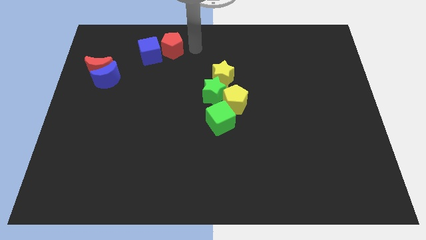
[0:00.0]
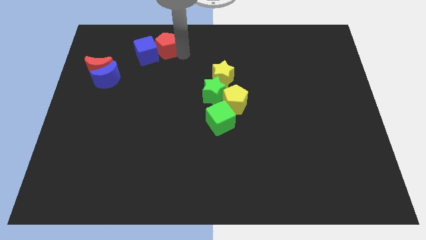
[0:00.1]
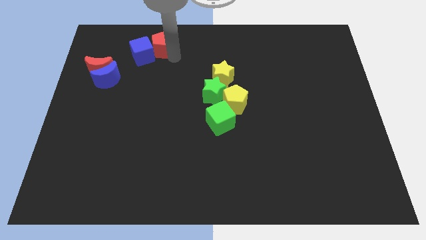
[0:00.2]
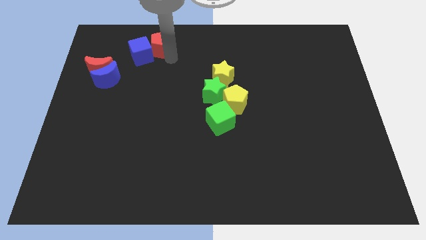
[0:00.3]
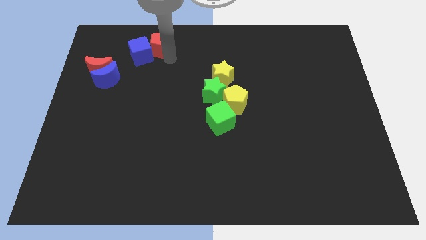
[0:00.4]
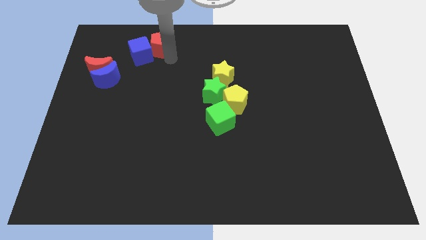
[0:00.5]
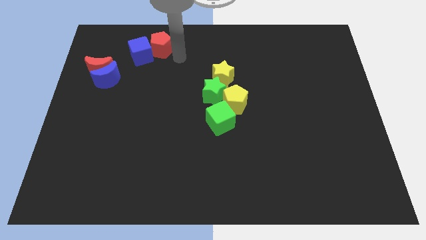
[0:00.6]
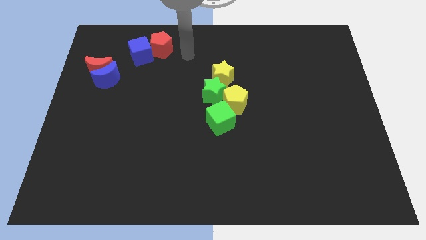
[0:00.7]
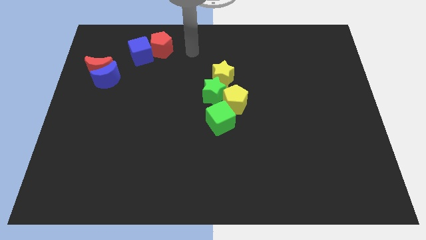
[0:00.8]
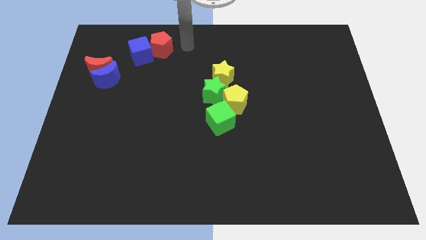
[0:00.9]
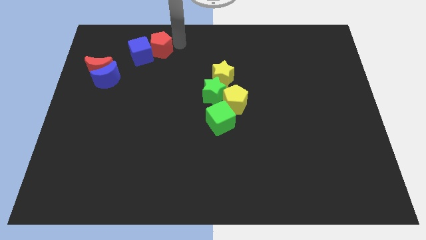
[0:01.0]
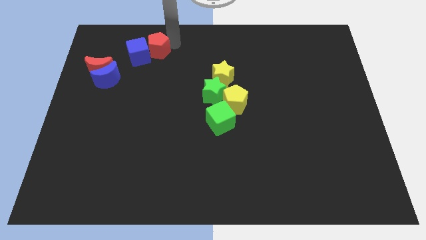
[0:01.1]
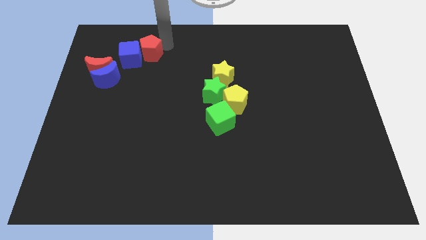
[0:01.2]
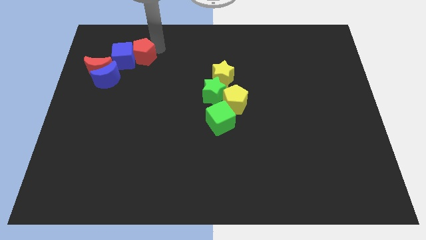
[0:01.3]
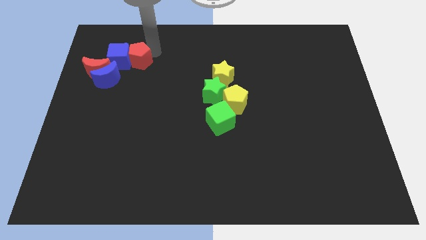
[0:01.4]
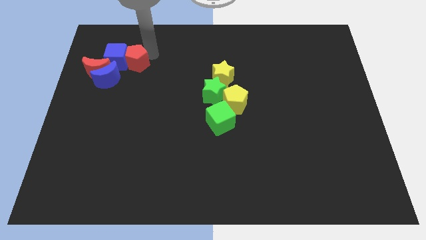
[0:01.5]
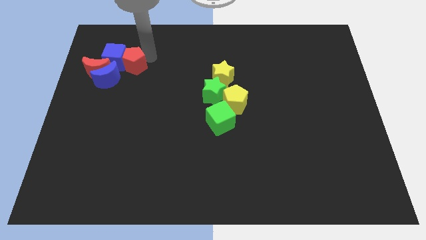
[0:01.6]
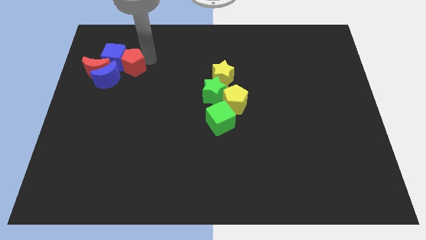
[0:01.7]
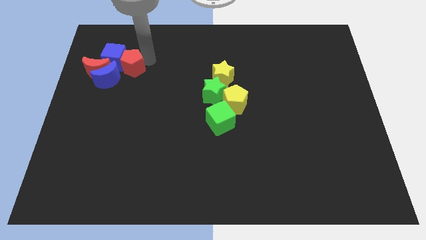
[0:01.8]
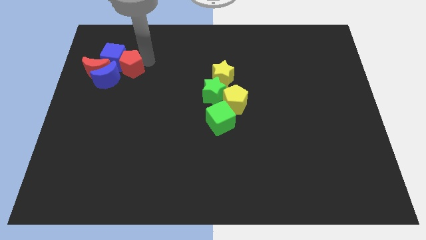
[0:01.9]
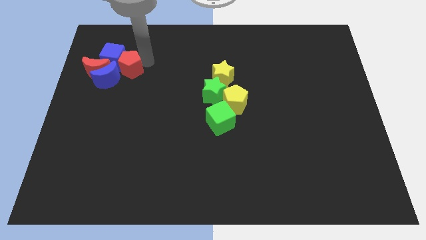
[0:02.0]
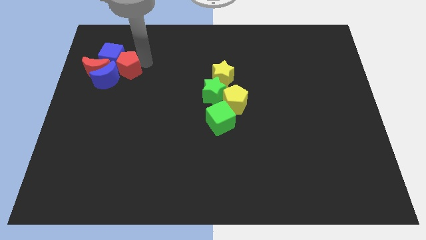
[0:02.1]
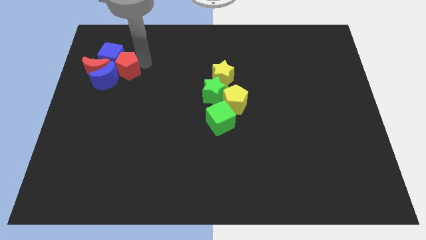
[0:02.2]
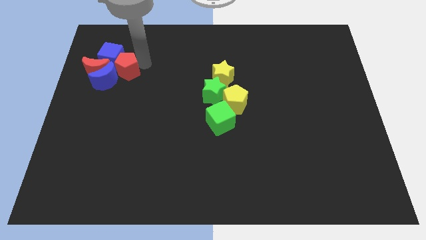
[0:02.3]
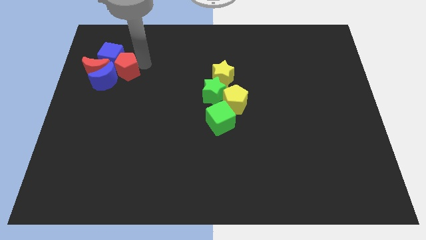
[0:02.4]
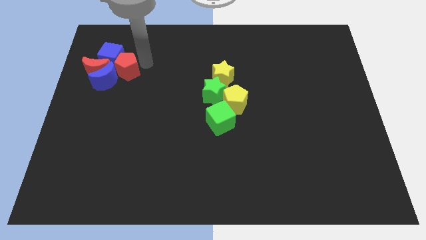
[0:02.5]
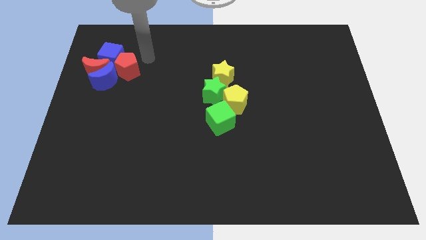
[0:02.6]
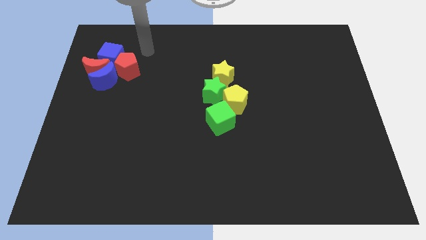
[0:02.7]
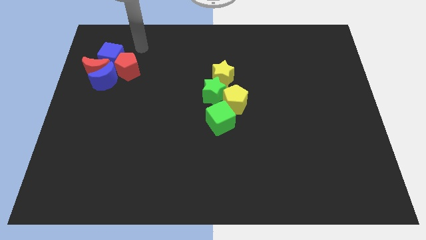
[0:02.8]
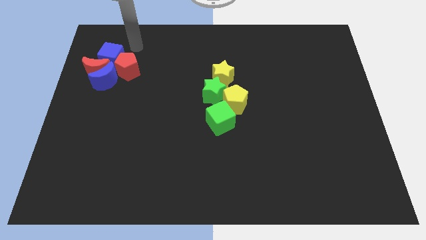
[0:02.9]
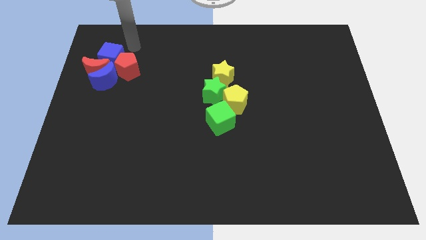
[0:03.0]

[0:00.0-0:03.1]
place the red block and blue block in group

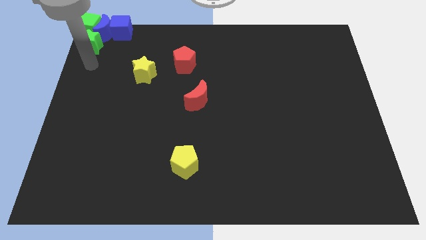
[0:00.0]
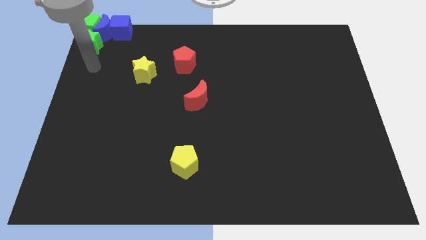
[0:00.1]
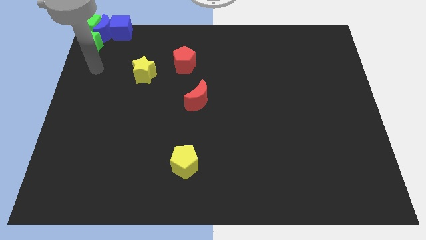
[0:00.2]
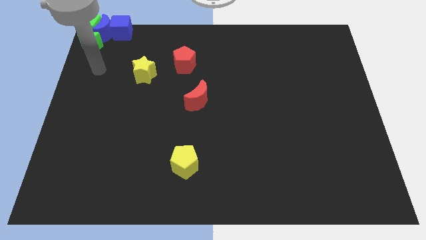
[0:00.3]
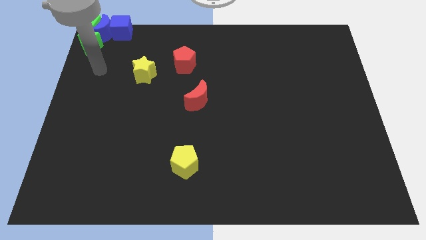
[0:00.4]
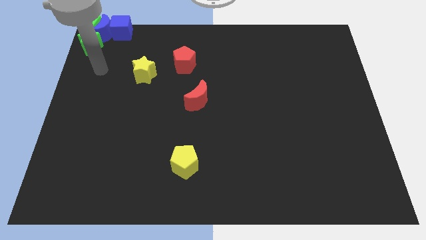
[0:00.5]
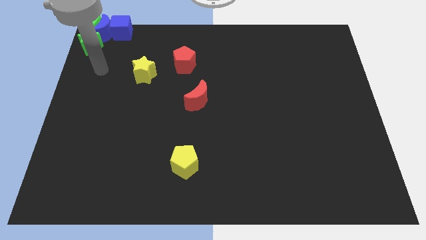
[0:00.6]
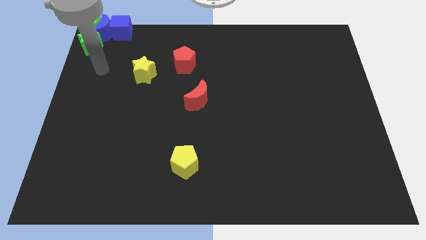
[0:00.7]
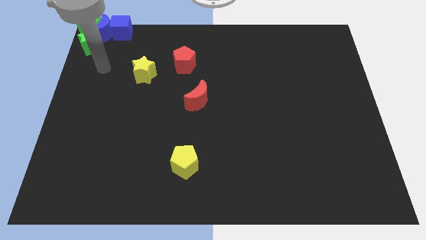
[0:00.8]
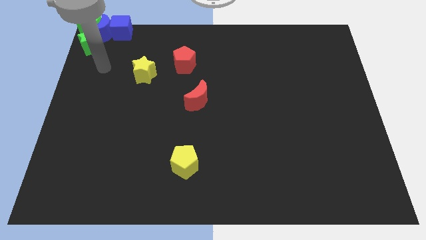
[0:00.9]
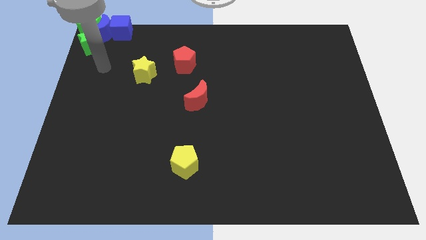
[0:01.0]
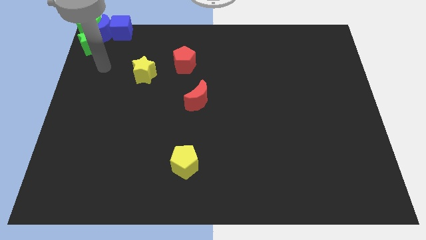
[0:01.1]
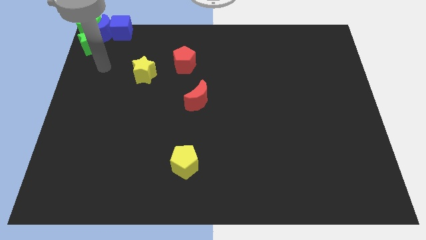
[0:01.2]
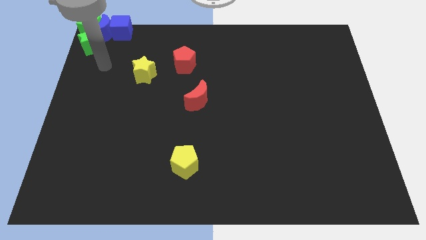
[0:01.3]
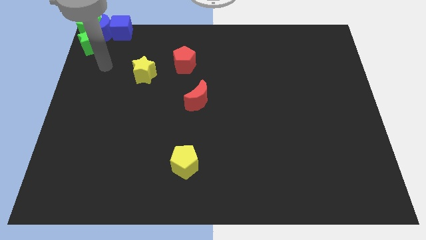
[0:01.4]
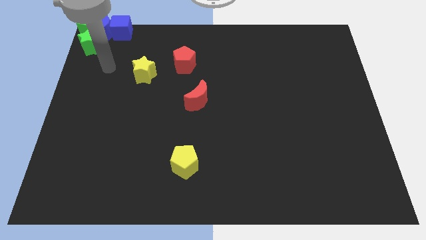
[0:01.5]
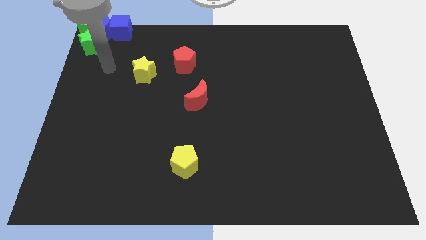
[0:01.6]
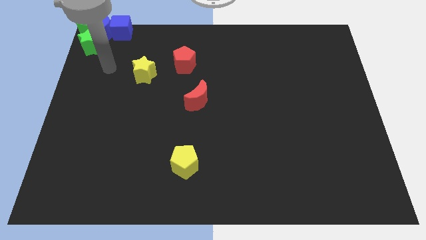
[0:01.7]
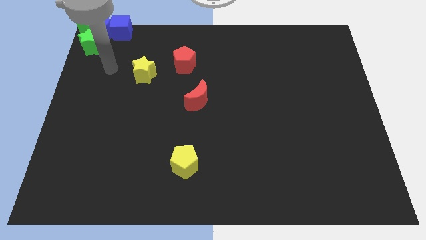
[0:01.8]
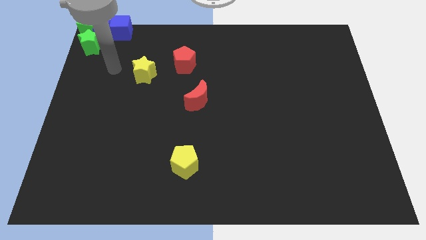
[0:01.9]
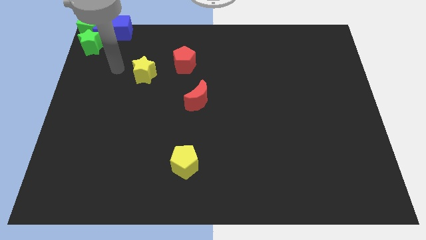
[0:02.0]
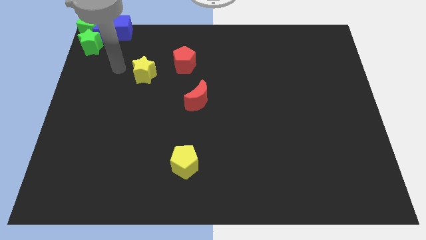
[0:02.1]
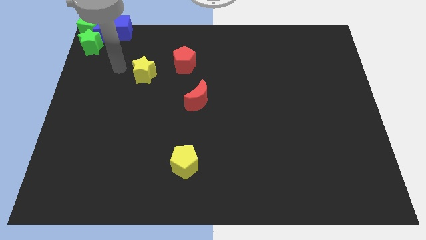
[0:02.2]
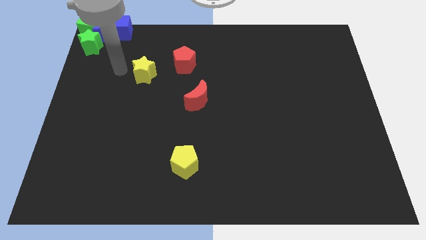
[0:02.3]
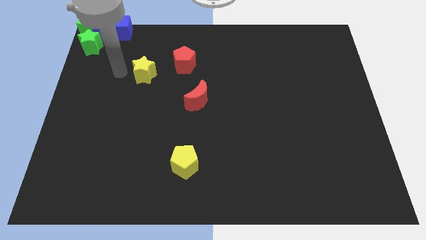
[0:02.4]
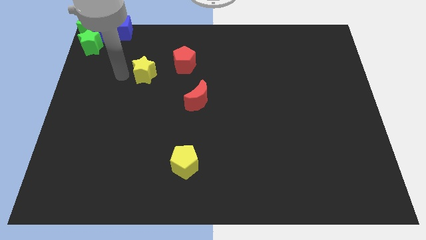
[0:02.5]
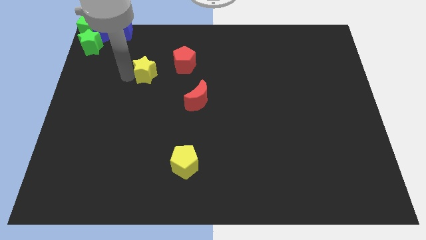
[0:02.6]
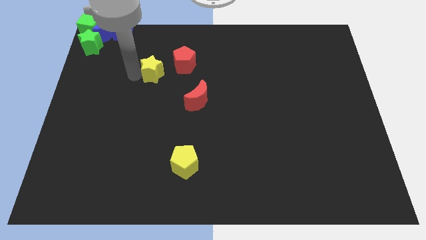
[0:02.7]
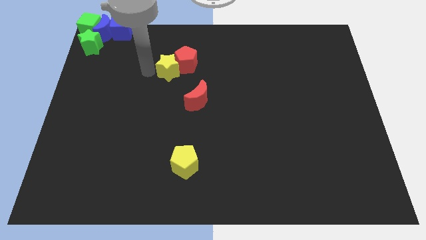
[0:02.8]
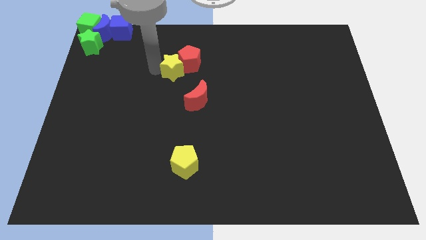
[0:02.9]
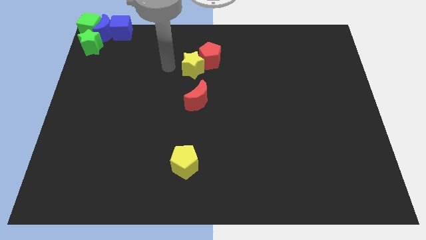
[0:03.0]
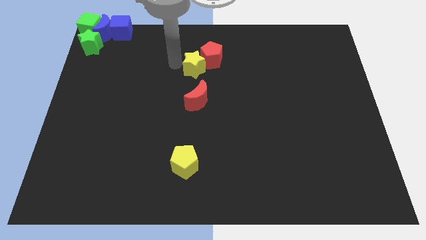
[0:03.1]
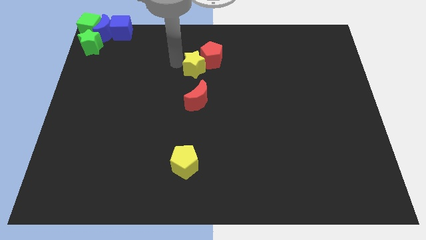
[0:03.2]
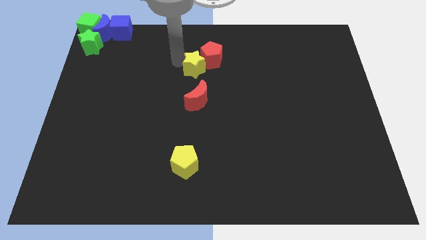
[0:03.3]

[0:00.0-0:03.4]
push the yellow star into the red pentagon

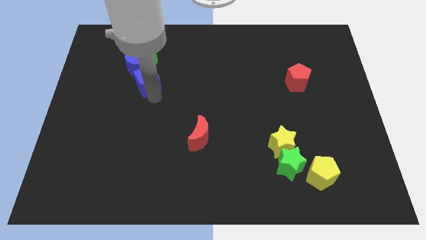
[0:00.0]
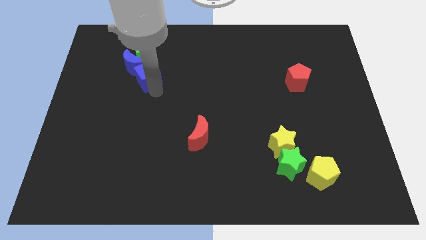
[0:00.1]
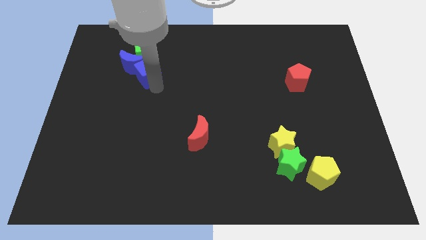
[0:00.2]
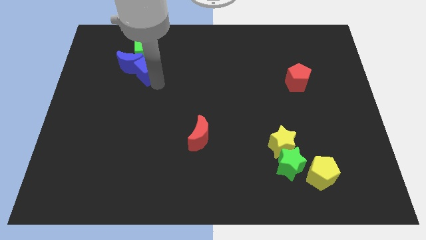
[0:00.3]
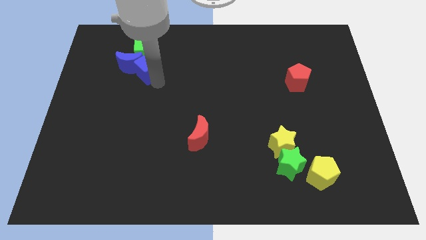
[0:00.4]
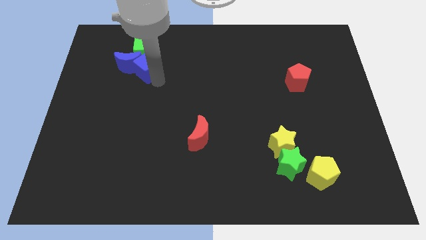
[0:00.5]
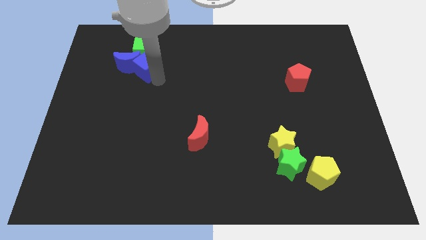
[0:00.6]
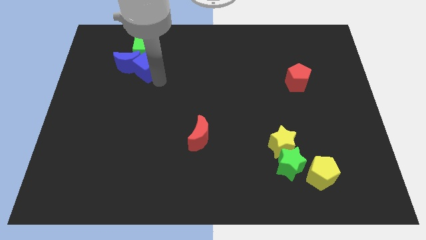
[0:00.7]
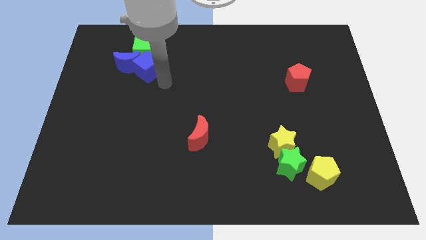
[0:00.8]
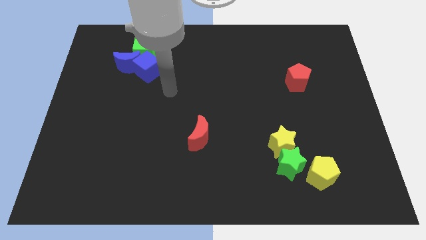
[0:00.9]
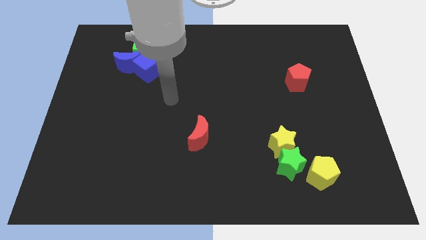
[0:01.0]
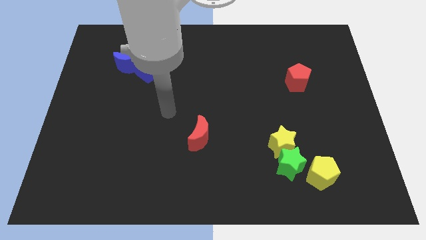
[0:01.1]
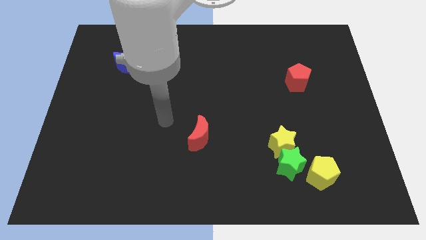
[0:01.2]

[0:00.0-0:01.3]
place blue cube below green cube

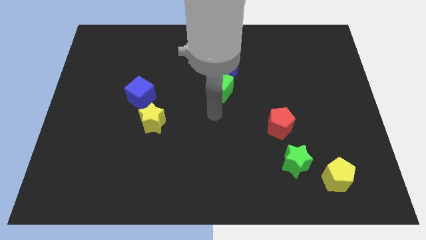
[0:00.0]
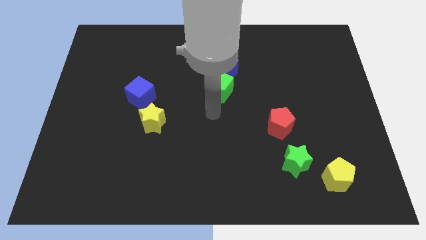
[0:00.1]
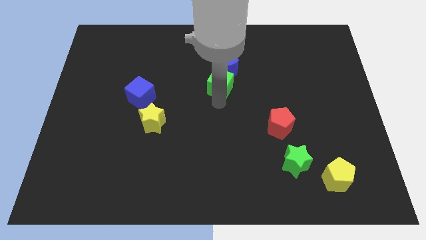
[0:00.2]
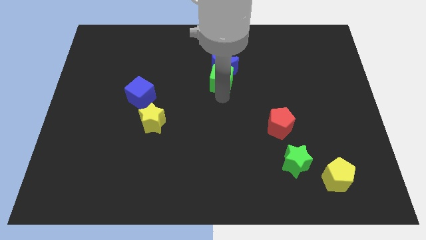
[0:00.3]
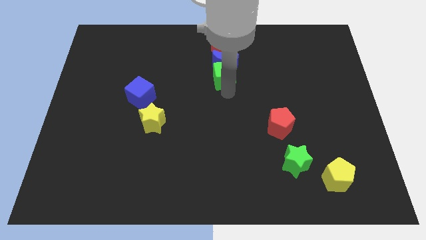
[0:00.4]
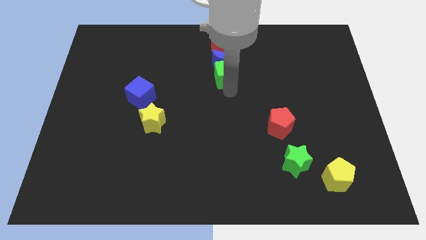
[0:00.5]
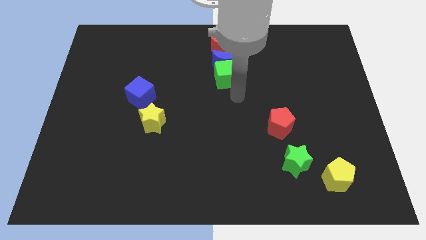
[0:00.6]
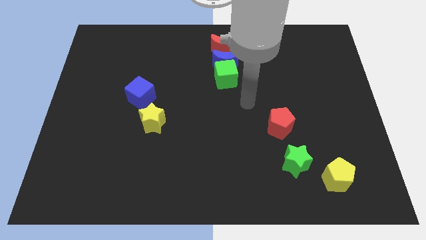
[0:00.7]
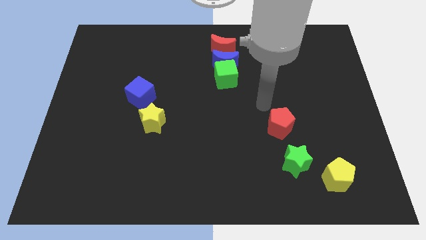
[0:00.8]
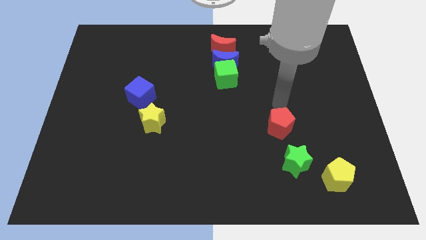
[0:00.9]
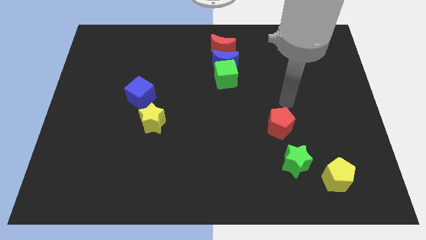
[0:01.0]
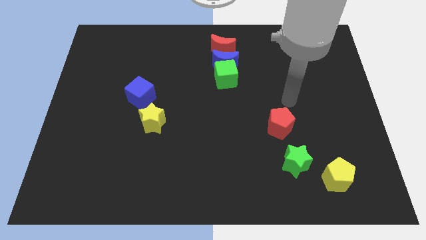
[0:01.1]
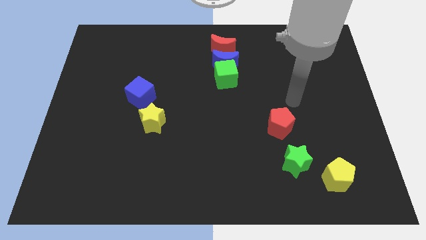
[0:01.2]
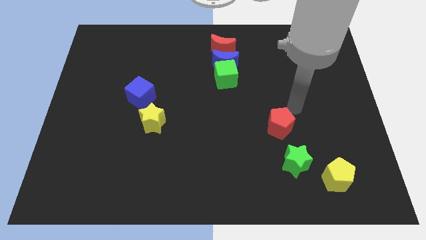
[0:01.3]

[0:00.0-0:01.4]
push the green cube along with the red and blue moon towards the top center
